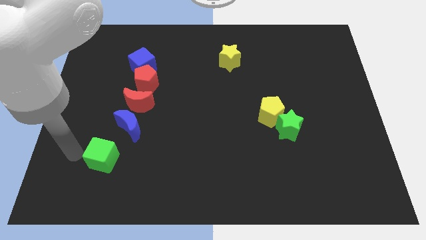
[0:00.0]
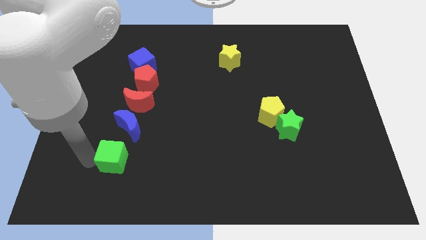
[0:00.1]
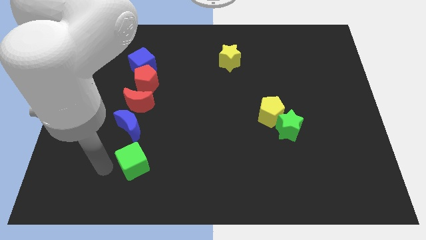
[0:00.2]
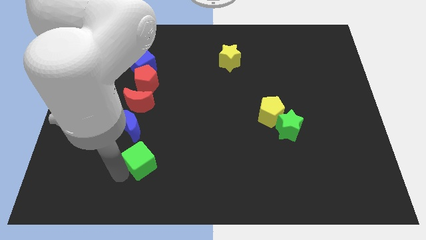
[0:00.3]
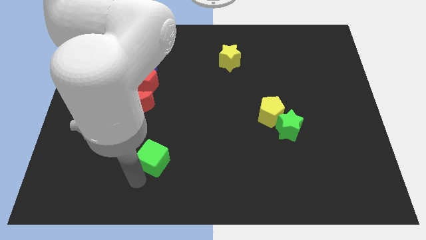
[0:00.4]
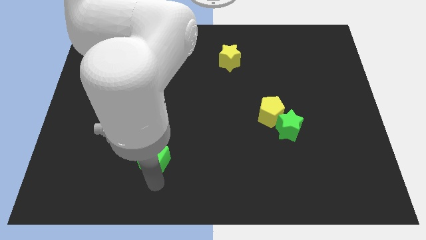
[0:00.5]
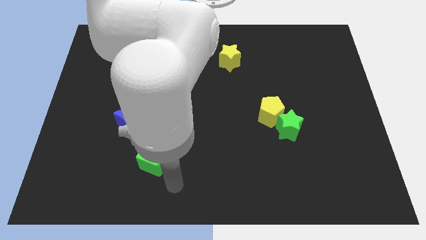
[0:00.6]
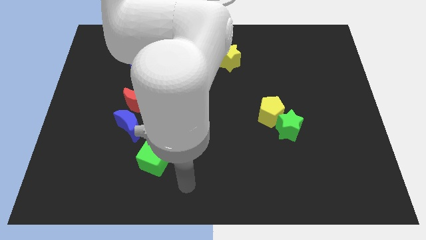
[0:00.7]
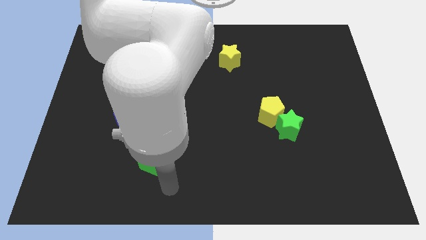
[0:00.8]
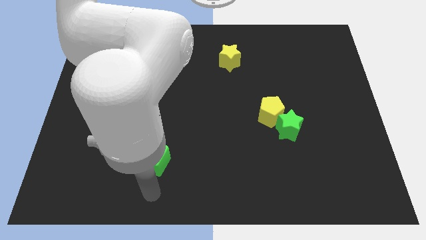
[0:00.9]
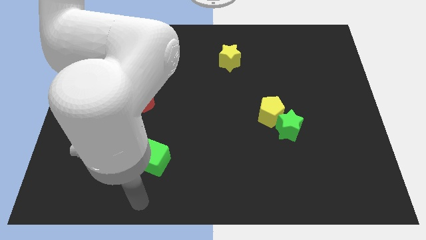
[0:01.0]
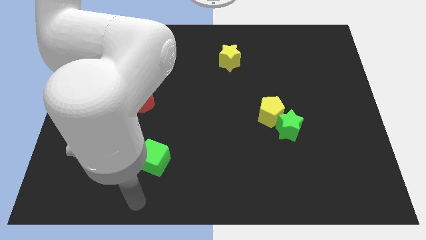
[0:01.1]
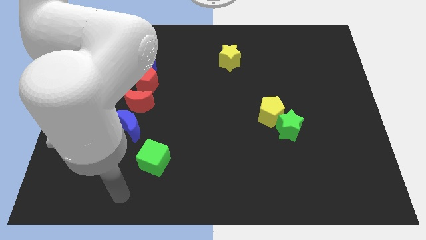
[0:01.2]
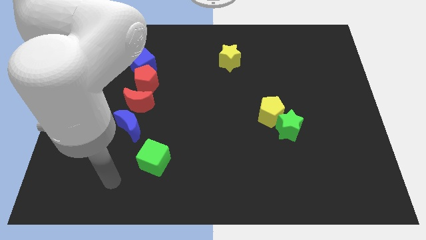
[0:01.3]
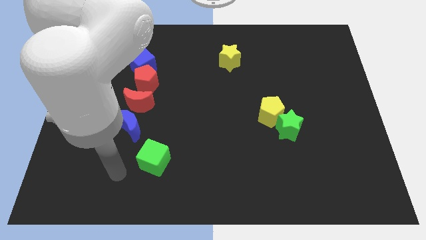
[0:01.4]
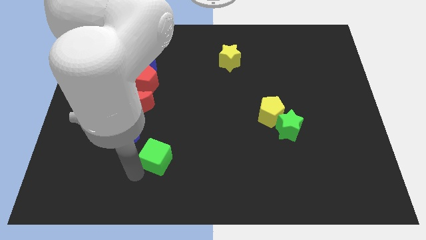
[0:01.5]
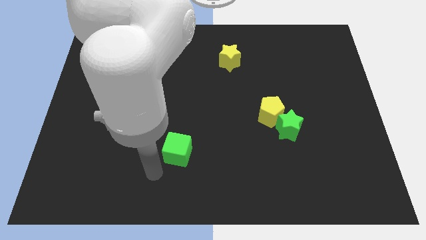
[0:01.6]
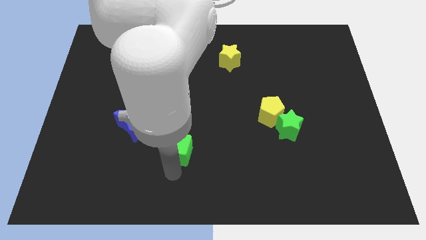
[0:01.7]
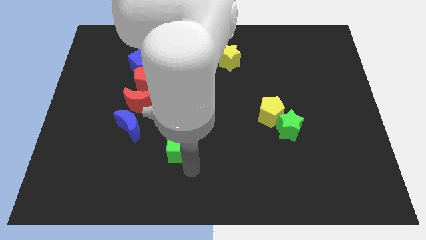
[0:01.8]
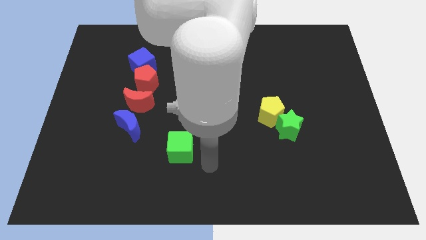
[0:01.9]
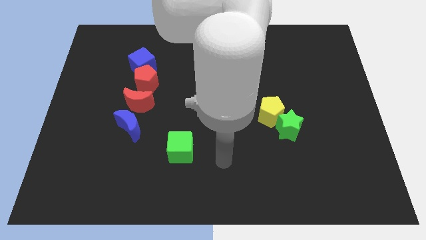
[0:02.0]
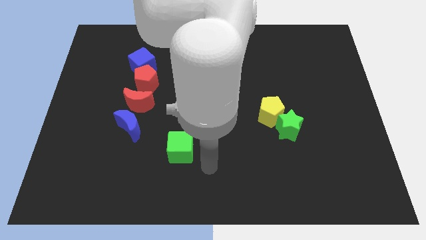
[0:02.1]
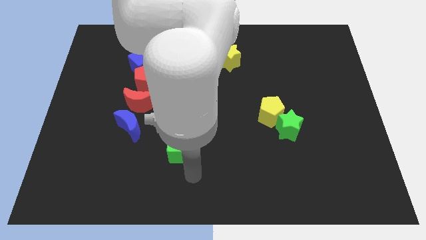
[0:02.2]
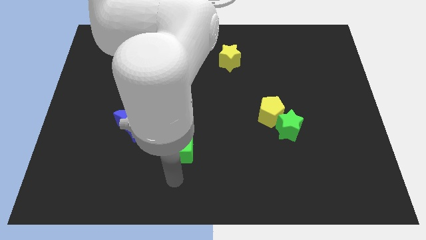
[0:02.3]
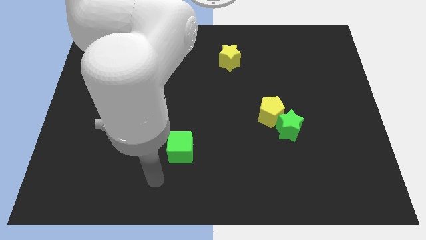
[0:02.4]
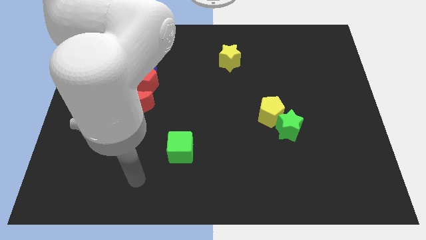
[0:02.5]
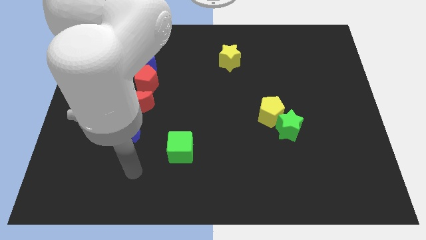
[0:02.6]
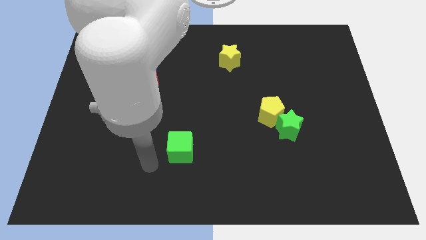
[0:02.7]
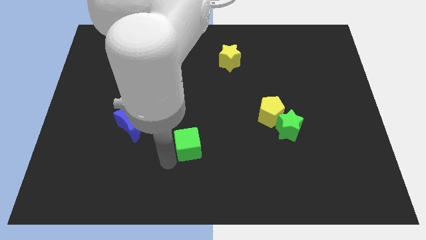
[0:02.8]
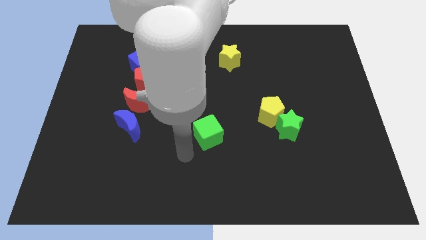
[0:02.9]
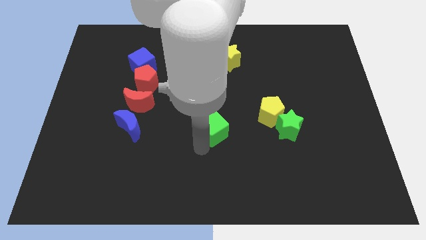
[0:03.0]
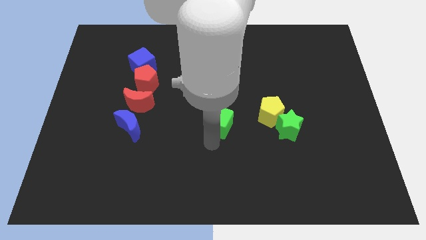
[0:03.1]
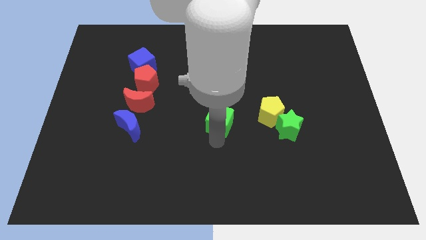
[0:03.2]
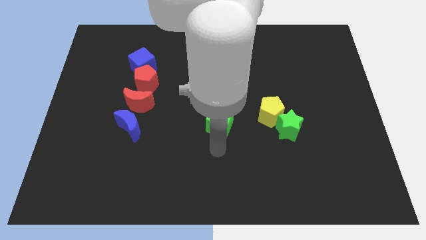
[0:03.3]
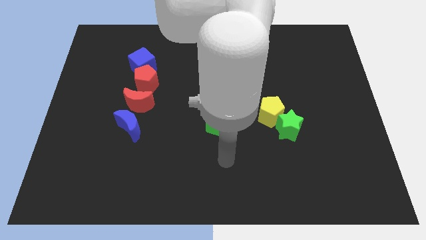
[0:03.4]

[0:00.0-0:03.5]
move the green cube towards the centre of the board

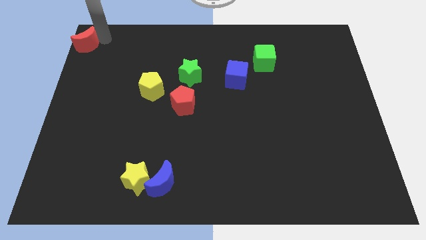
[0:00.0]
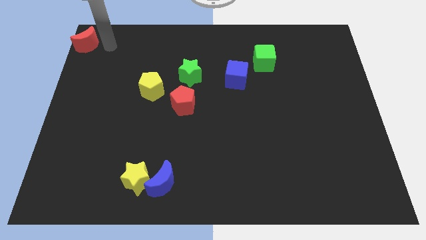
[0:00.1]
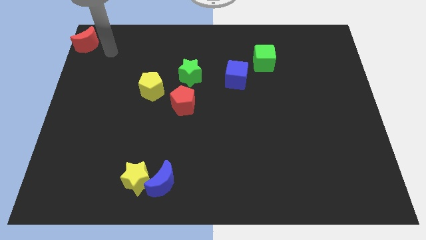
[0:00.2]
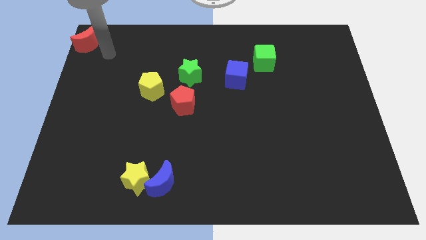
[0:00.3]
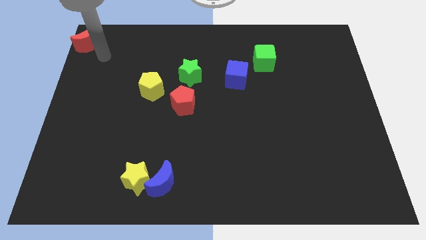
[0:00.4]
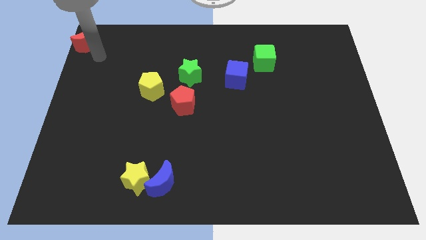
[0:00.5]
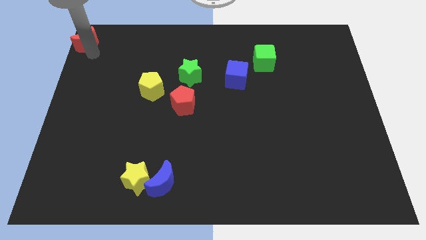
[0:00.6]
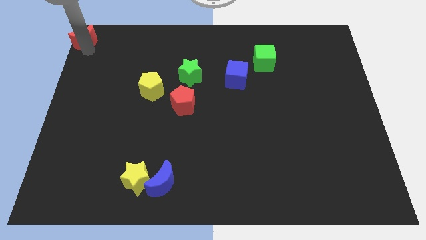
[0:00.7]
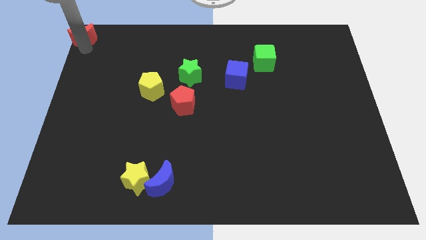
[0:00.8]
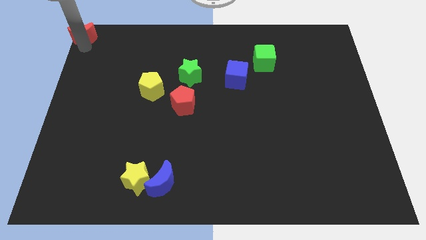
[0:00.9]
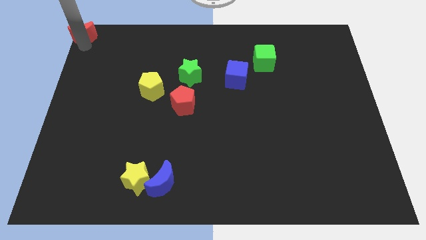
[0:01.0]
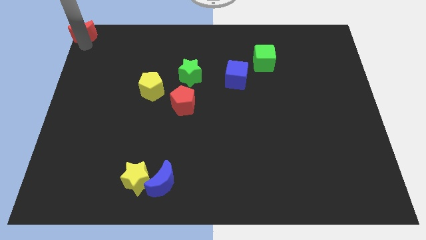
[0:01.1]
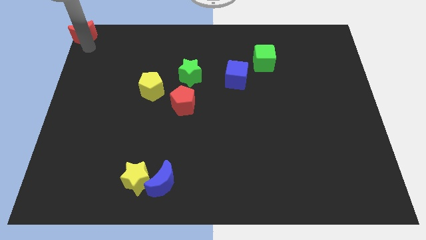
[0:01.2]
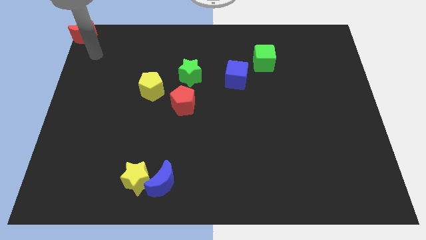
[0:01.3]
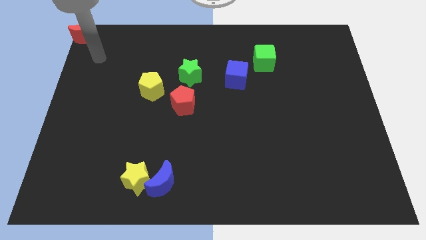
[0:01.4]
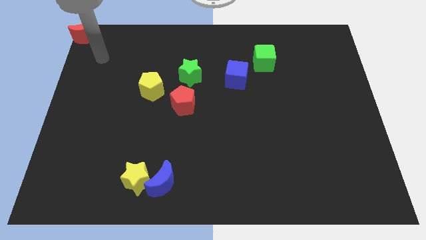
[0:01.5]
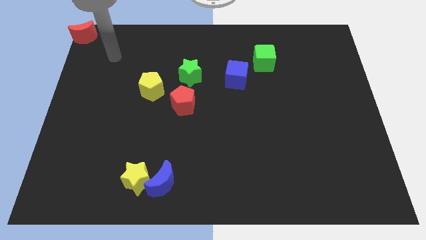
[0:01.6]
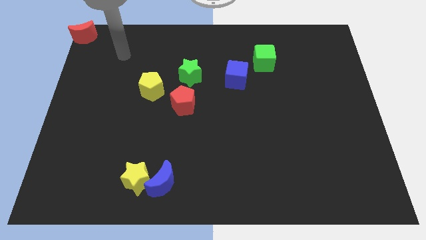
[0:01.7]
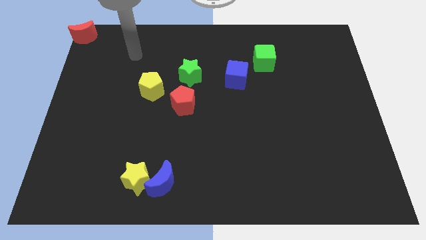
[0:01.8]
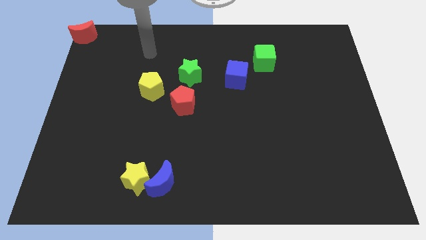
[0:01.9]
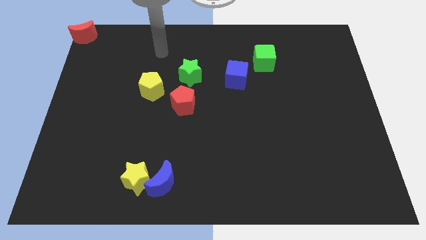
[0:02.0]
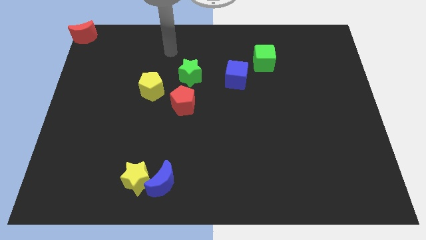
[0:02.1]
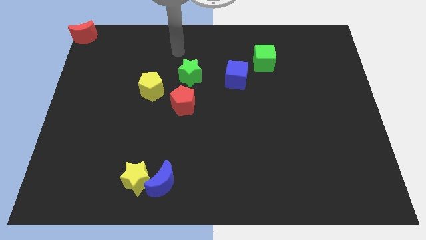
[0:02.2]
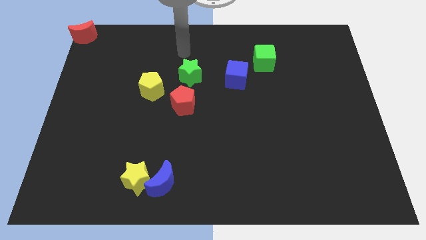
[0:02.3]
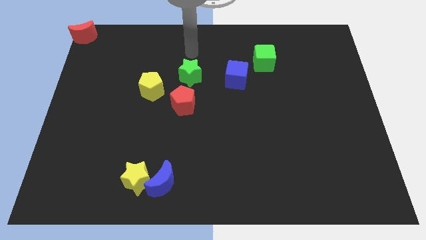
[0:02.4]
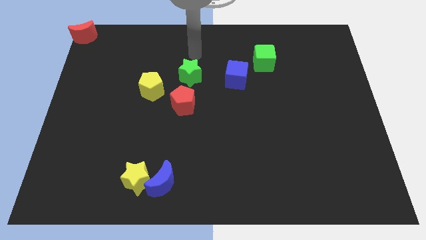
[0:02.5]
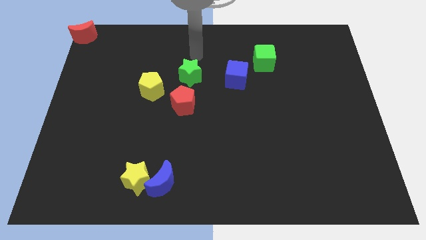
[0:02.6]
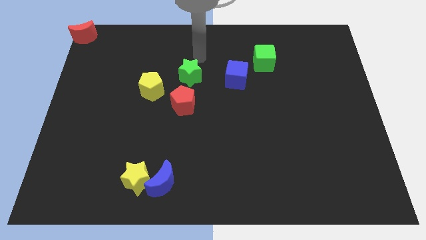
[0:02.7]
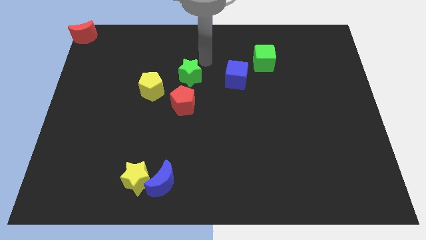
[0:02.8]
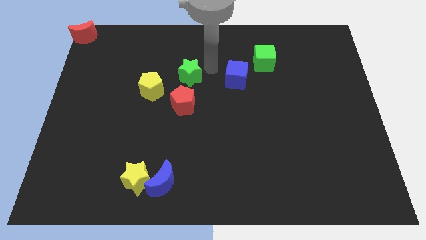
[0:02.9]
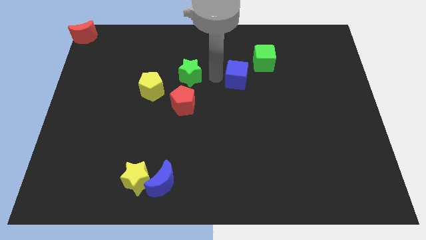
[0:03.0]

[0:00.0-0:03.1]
place your arm in between the green star and blue cube

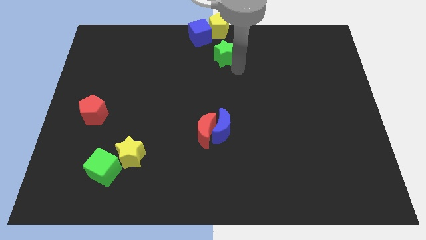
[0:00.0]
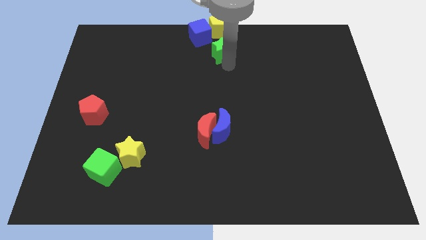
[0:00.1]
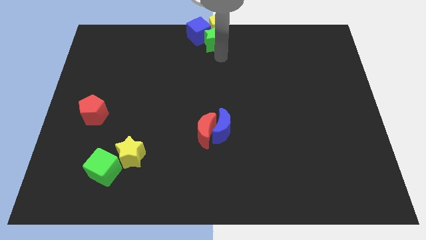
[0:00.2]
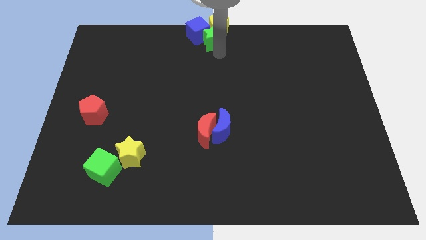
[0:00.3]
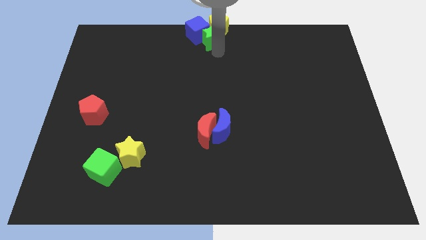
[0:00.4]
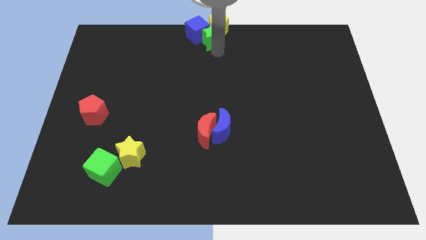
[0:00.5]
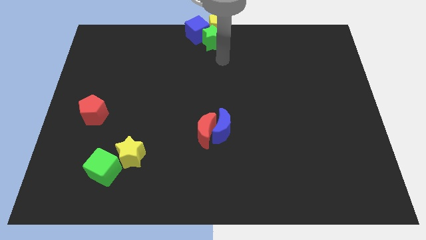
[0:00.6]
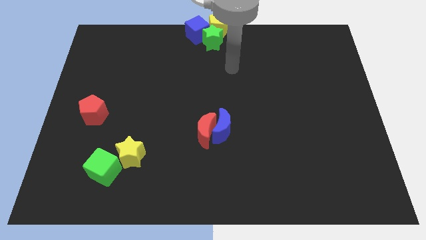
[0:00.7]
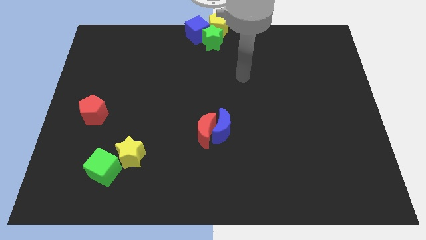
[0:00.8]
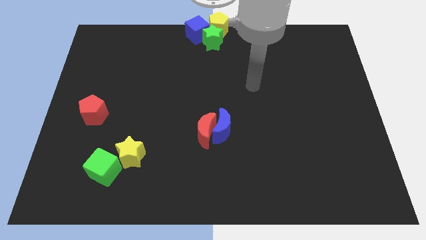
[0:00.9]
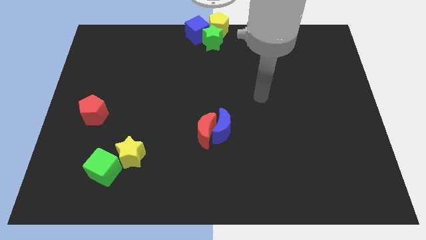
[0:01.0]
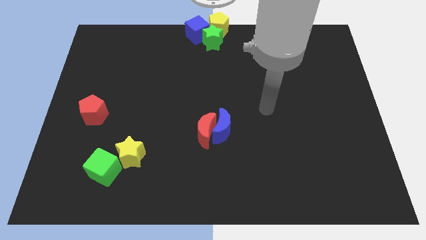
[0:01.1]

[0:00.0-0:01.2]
push green star to the top center of the board

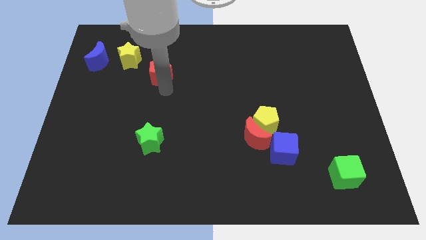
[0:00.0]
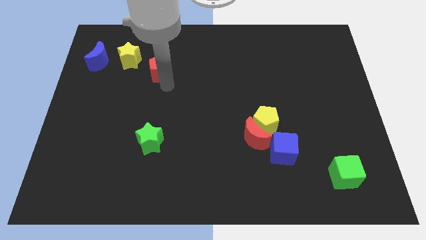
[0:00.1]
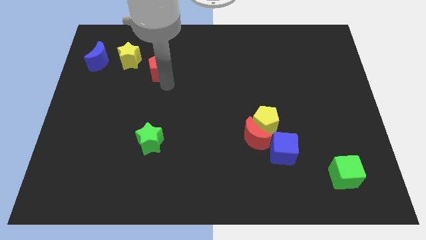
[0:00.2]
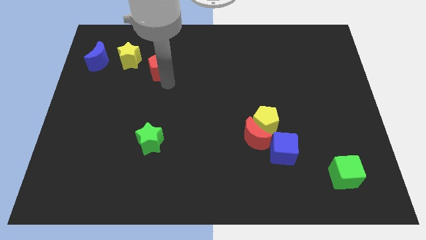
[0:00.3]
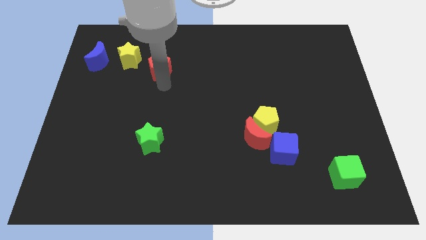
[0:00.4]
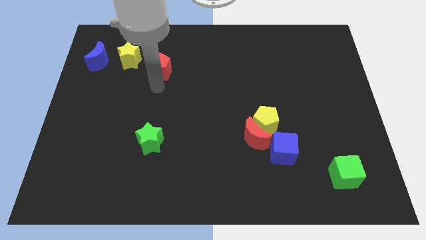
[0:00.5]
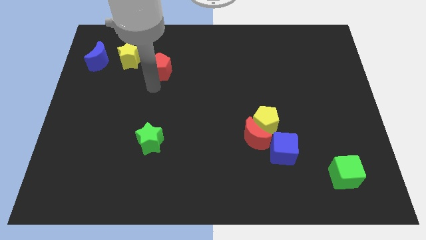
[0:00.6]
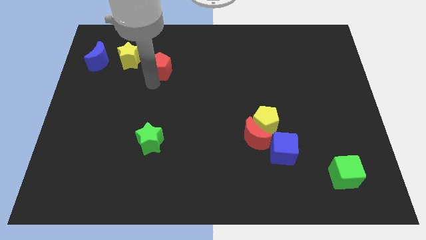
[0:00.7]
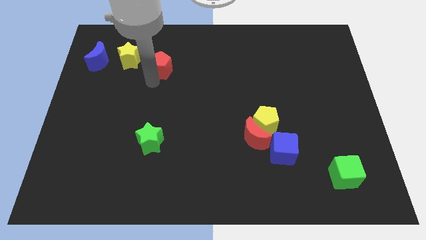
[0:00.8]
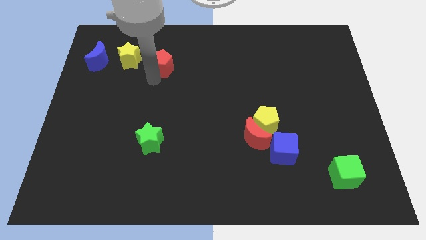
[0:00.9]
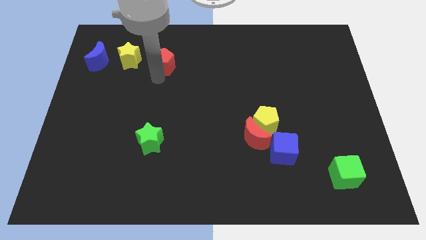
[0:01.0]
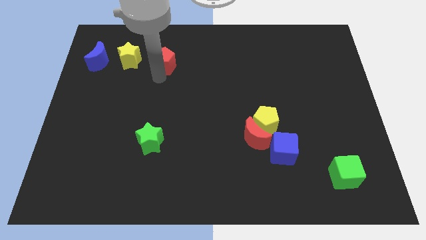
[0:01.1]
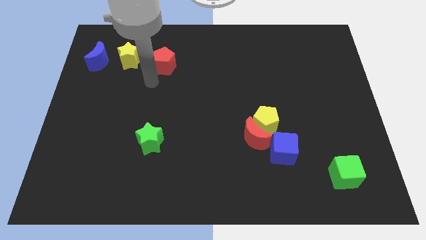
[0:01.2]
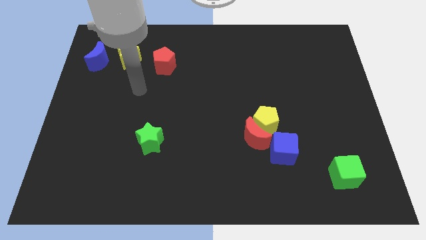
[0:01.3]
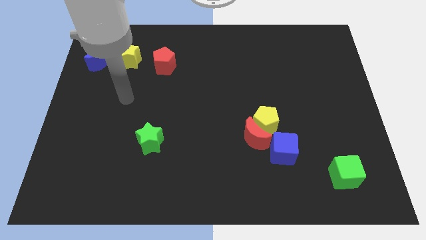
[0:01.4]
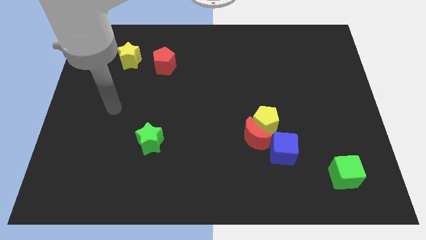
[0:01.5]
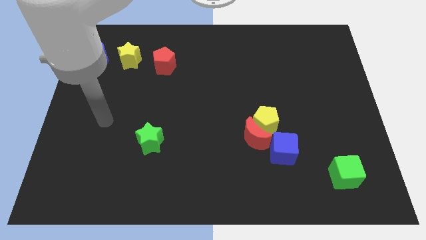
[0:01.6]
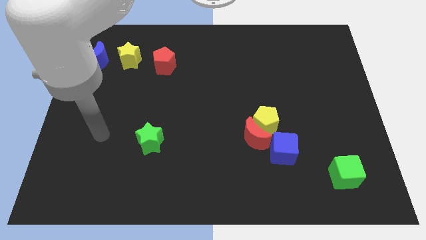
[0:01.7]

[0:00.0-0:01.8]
place the red pentagon vertically to the top side of the green star
